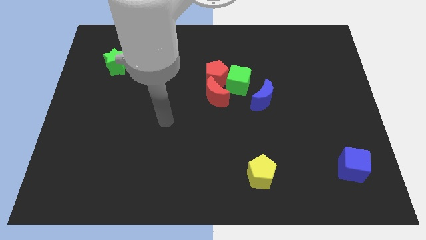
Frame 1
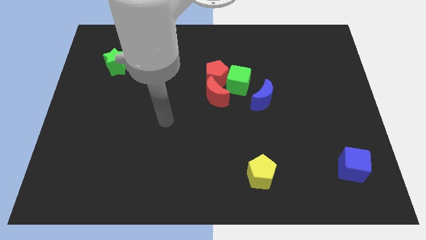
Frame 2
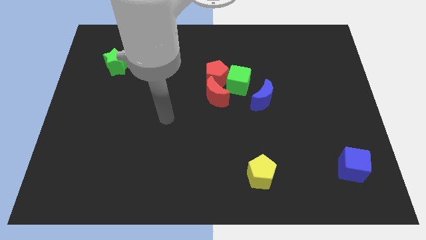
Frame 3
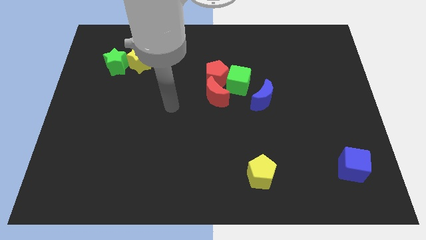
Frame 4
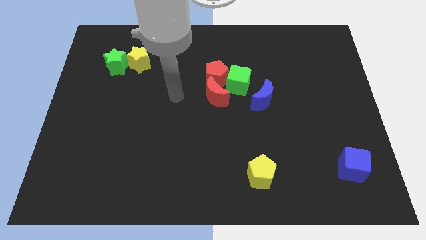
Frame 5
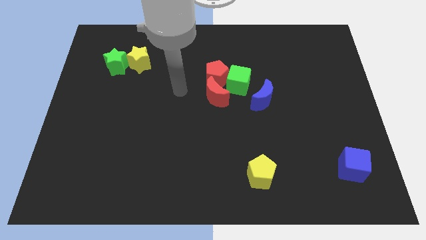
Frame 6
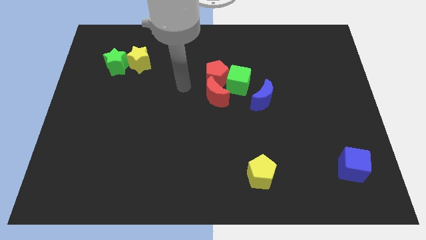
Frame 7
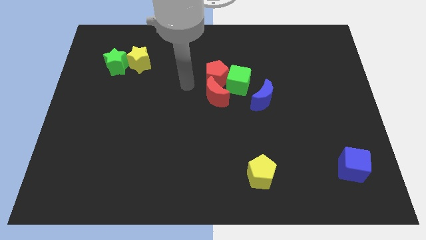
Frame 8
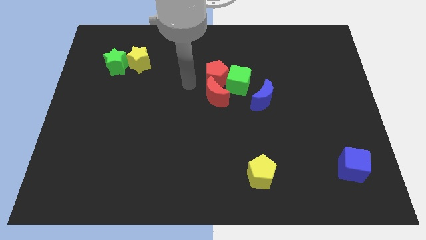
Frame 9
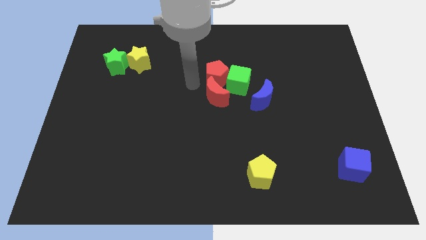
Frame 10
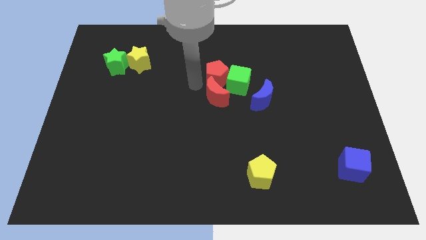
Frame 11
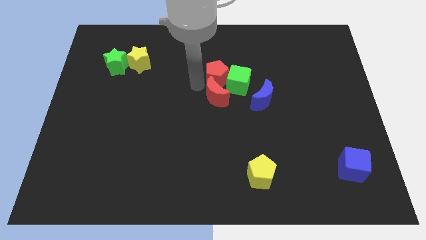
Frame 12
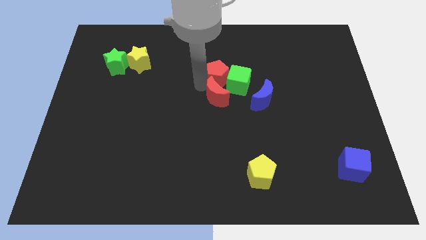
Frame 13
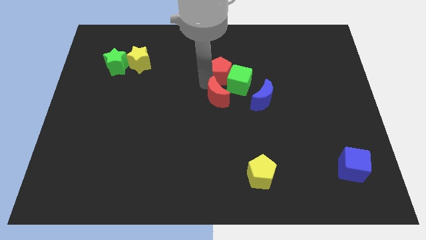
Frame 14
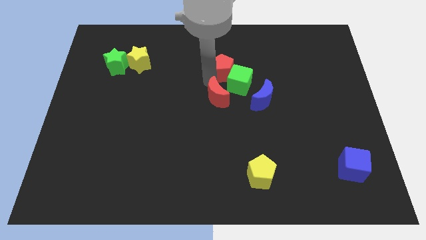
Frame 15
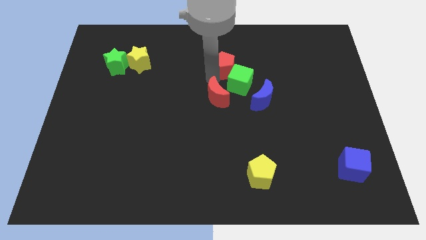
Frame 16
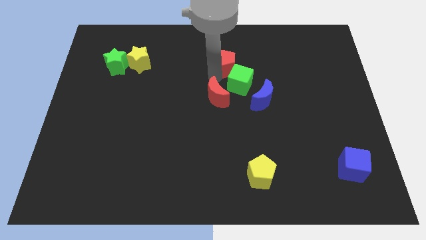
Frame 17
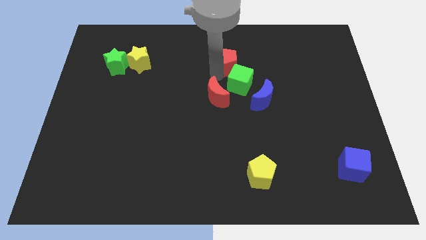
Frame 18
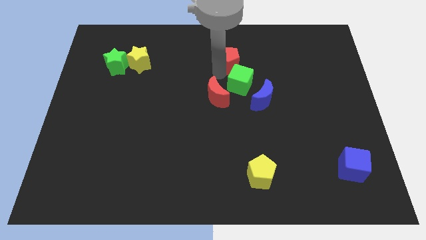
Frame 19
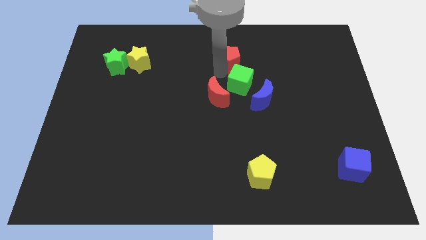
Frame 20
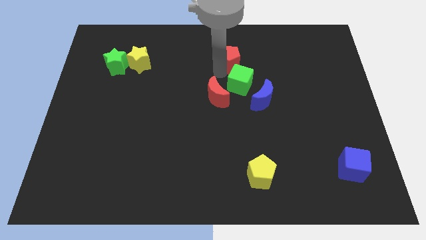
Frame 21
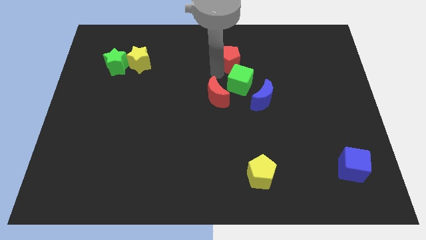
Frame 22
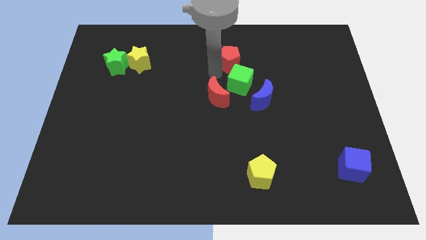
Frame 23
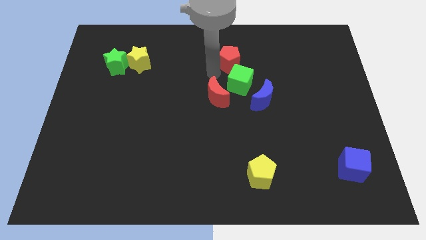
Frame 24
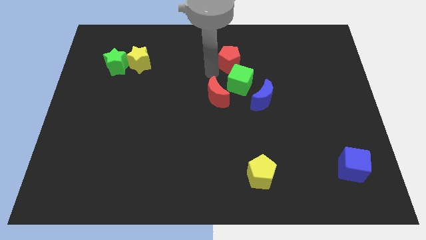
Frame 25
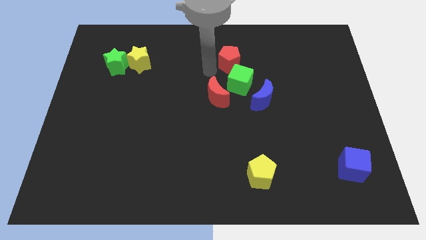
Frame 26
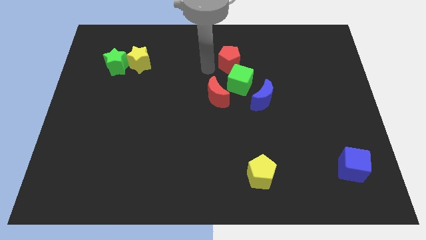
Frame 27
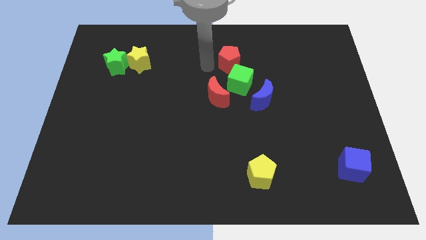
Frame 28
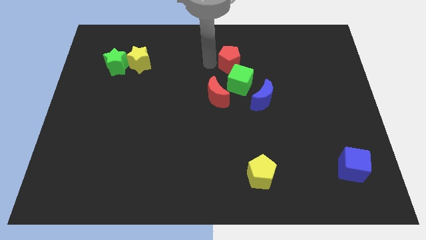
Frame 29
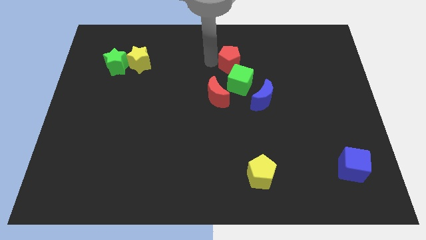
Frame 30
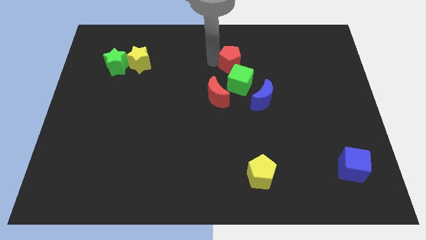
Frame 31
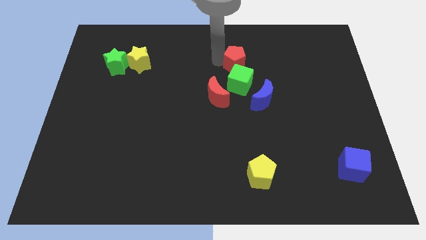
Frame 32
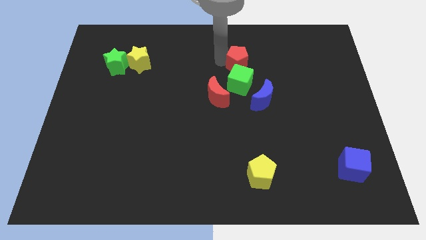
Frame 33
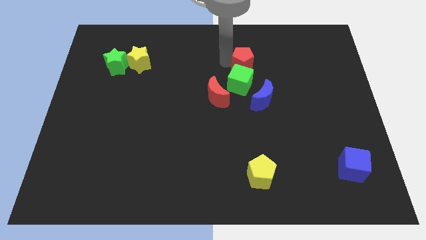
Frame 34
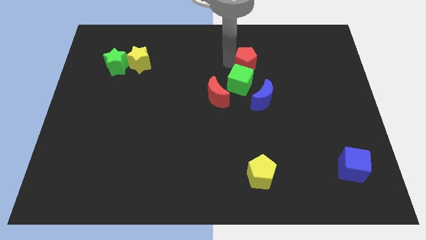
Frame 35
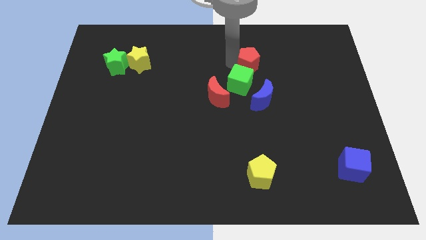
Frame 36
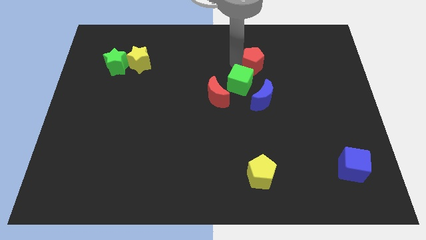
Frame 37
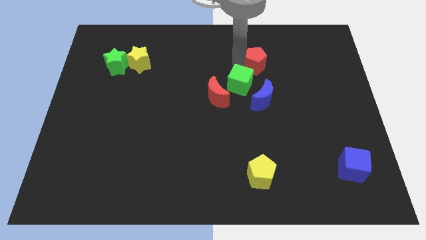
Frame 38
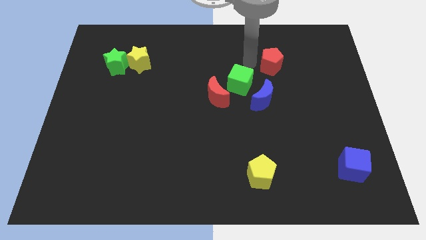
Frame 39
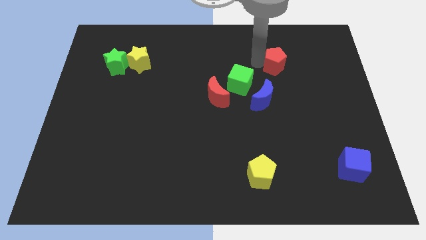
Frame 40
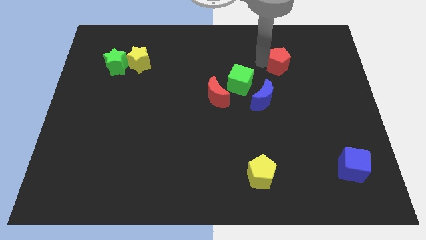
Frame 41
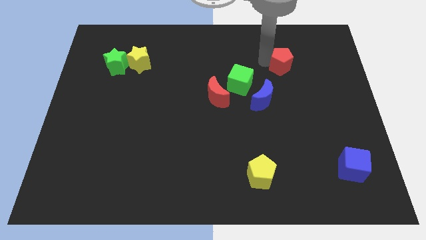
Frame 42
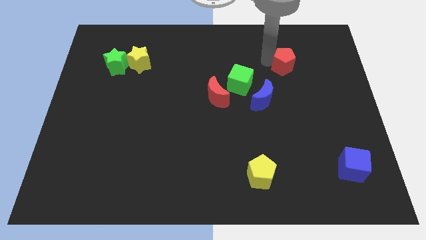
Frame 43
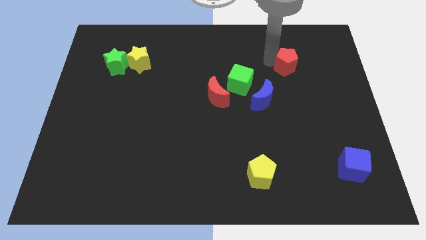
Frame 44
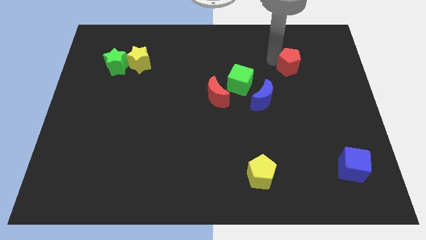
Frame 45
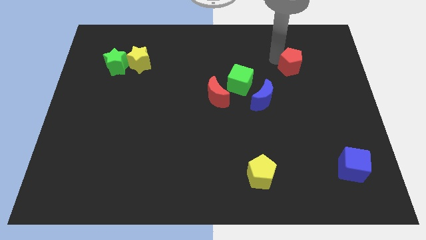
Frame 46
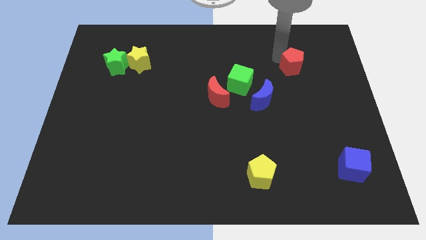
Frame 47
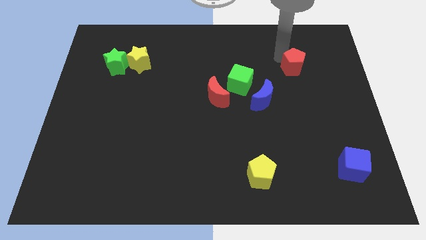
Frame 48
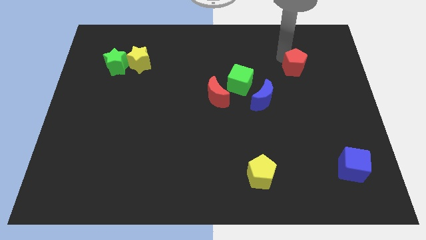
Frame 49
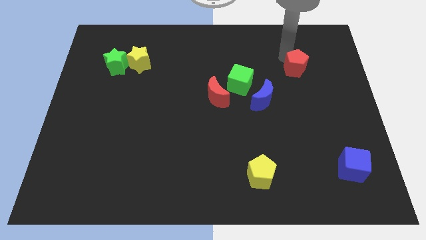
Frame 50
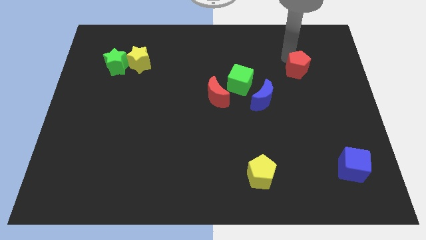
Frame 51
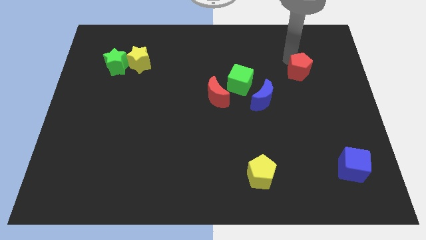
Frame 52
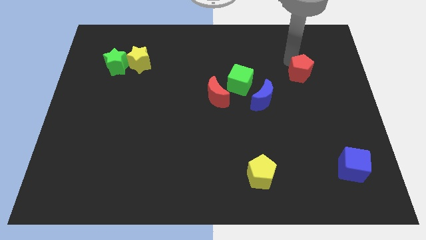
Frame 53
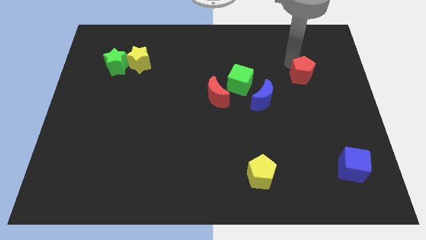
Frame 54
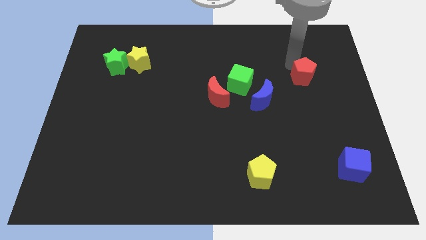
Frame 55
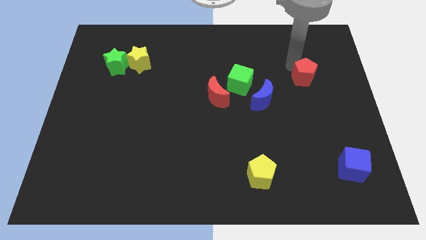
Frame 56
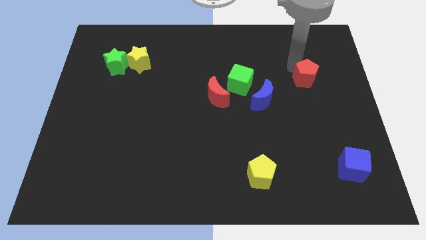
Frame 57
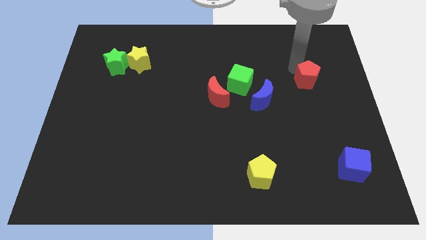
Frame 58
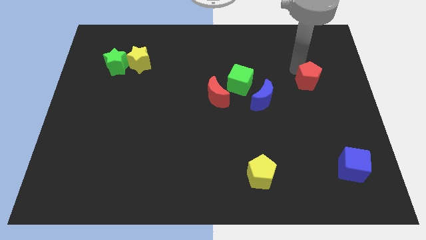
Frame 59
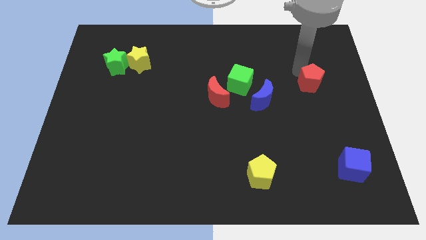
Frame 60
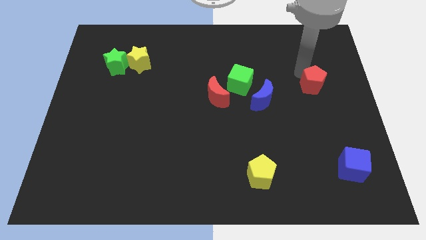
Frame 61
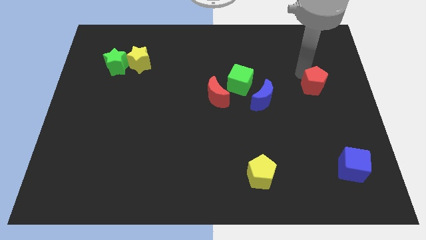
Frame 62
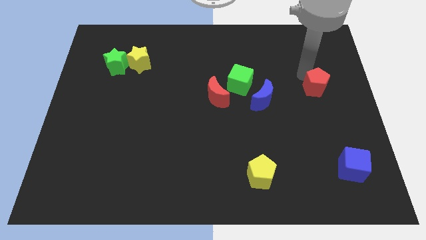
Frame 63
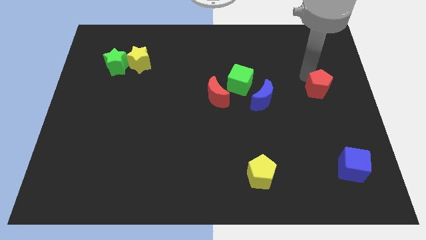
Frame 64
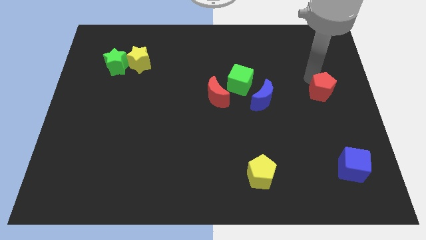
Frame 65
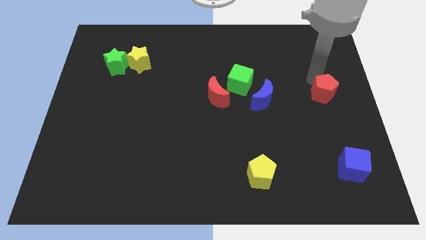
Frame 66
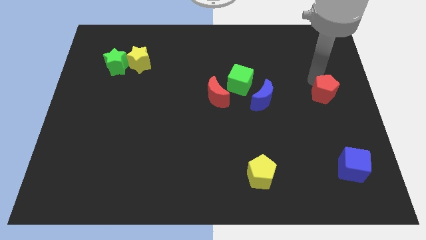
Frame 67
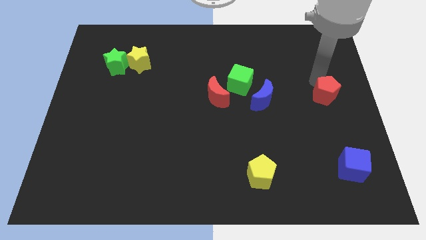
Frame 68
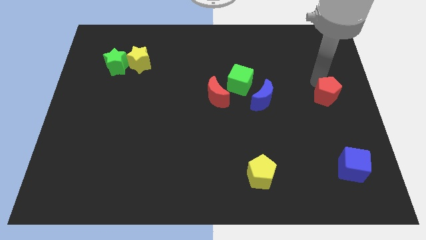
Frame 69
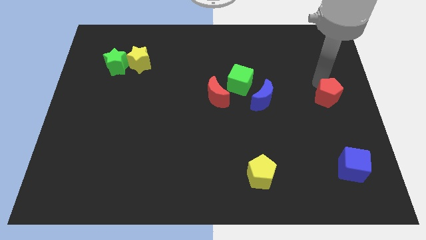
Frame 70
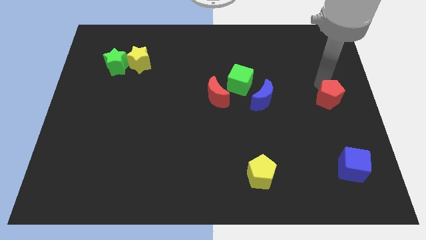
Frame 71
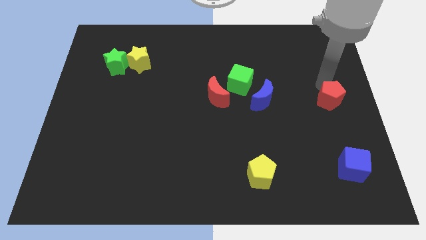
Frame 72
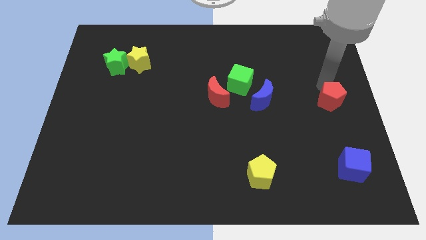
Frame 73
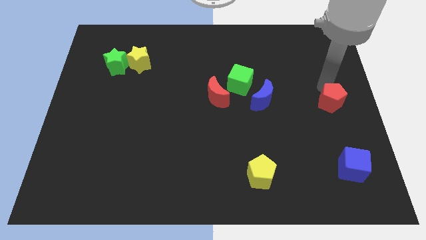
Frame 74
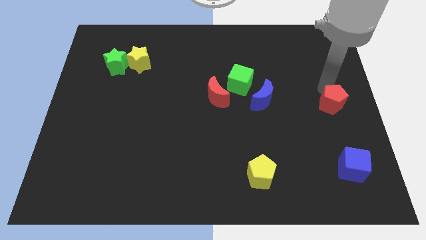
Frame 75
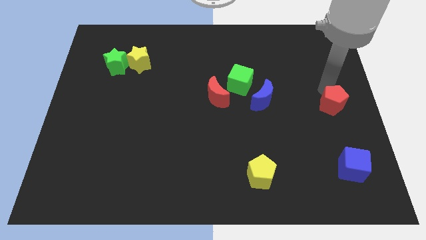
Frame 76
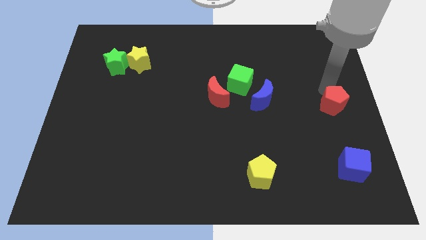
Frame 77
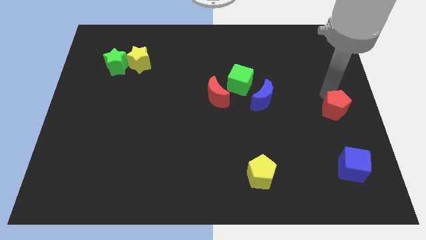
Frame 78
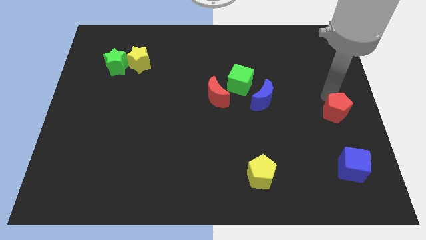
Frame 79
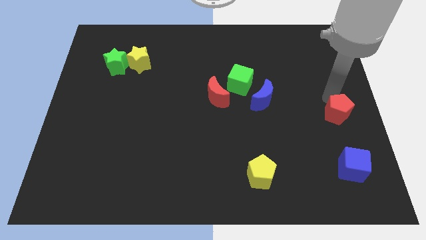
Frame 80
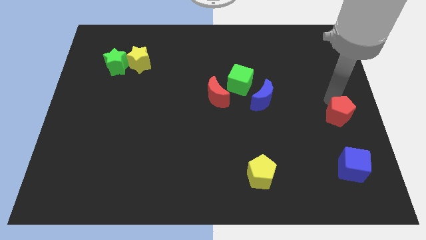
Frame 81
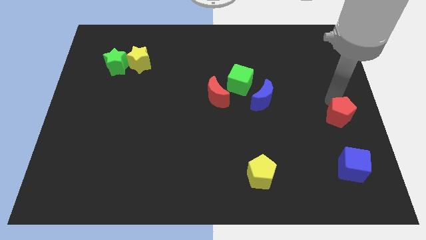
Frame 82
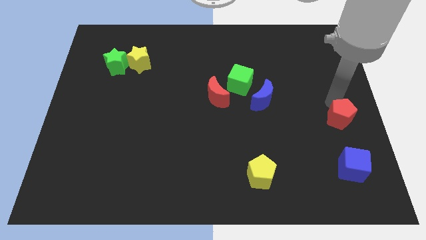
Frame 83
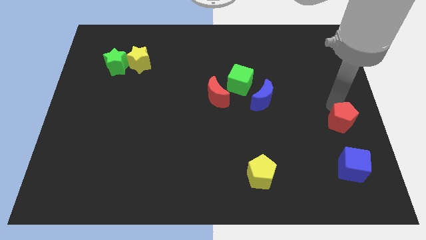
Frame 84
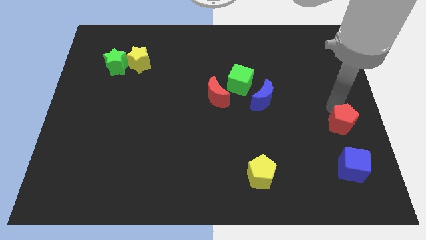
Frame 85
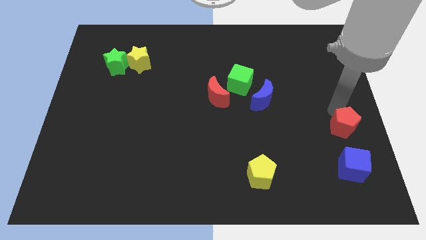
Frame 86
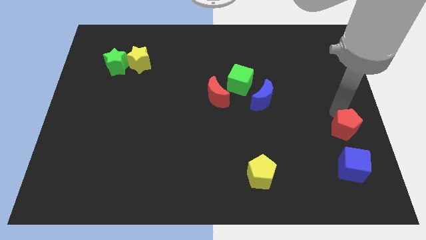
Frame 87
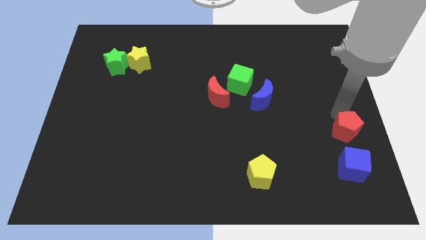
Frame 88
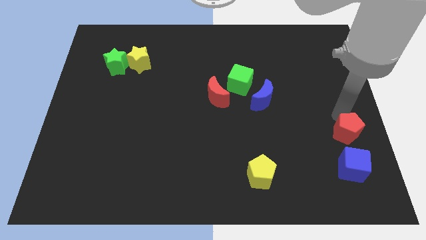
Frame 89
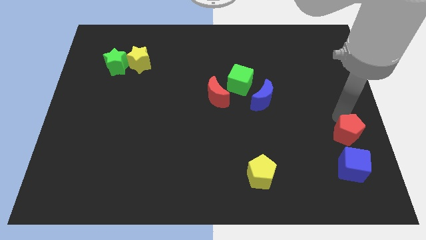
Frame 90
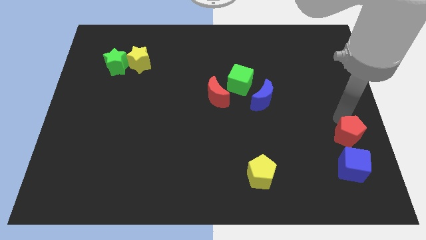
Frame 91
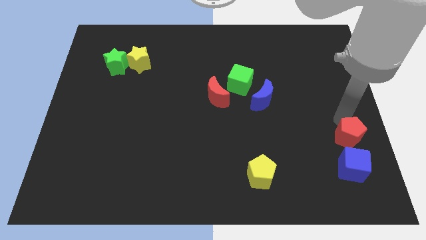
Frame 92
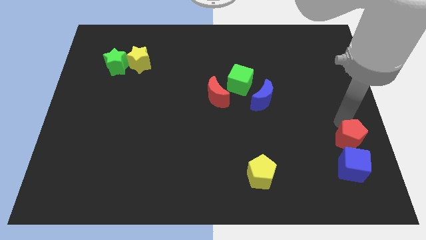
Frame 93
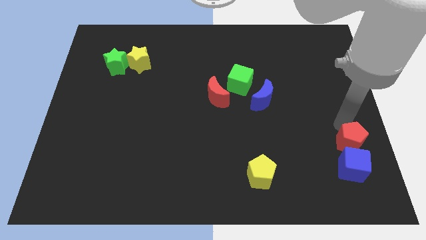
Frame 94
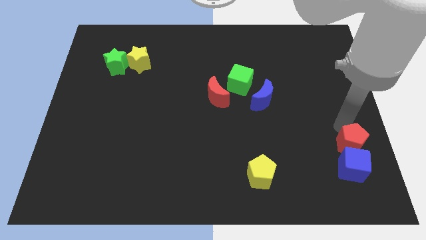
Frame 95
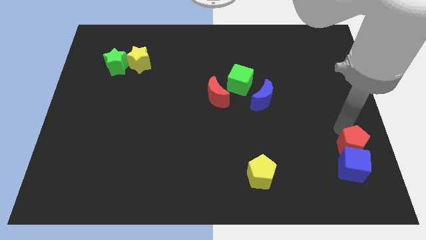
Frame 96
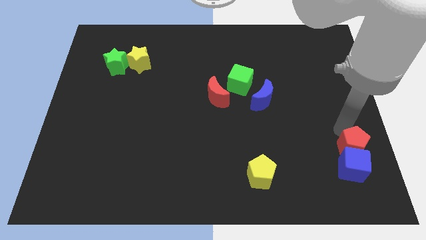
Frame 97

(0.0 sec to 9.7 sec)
push the red pentagon to the blue cube
